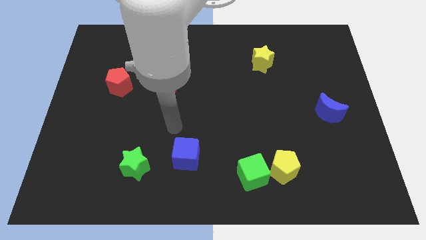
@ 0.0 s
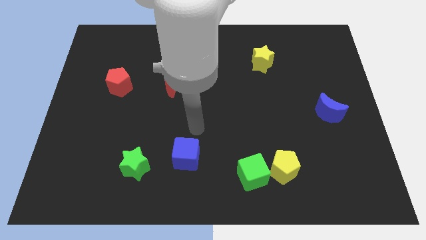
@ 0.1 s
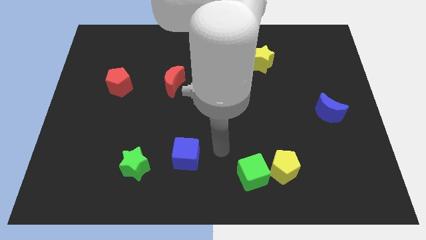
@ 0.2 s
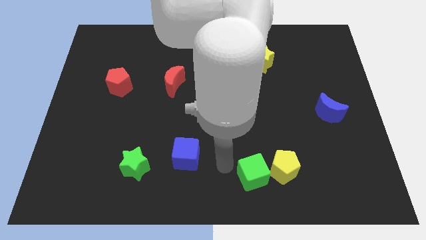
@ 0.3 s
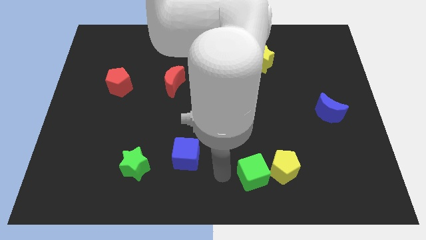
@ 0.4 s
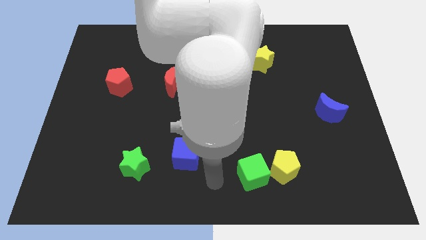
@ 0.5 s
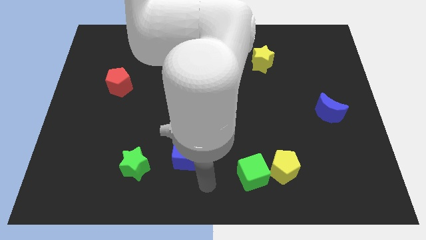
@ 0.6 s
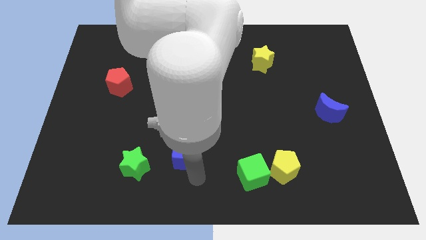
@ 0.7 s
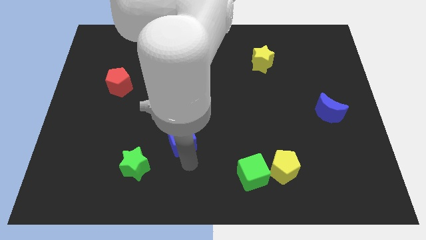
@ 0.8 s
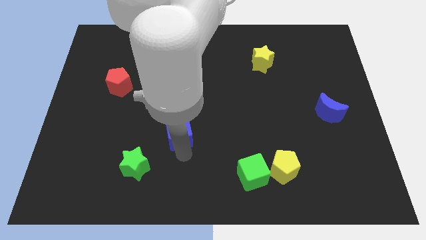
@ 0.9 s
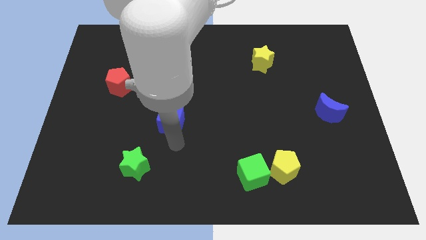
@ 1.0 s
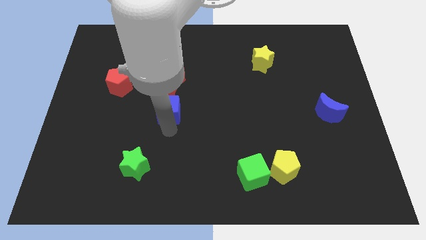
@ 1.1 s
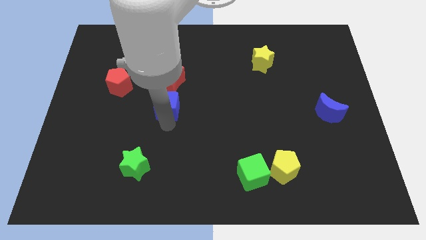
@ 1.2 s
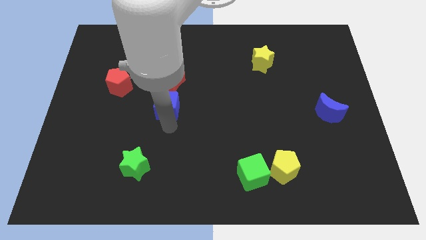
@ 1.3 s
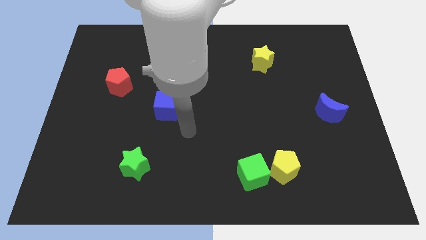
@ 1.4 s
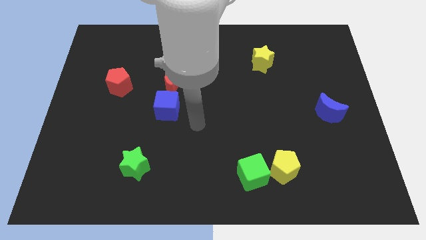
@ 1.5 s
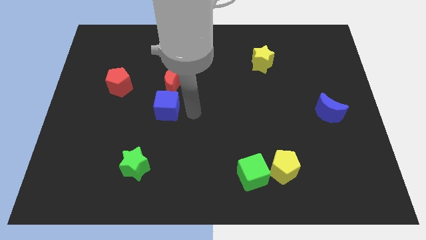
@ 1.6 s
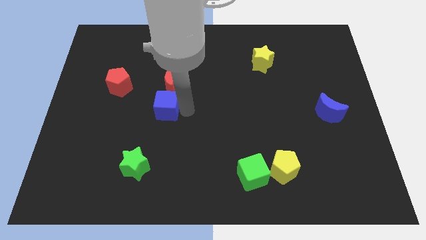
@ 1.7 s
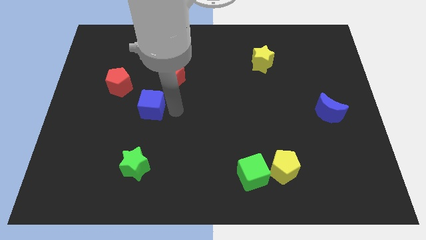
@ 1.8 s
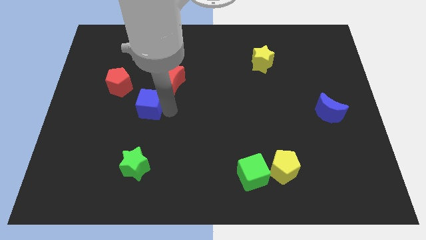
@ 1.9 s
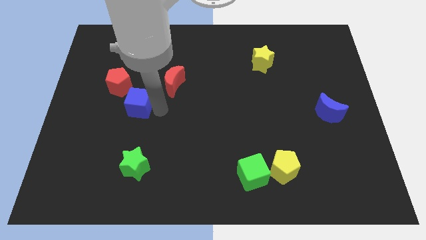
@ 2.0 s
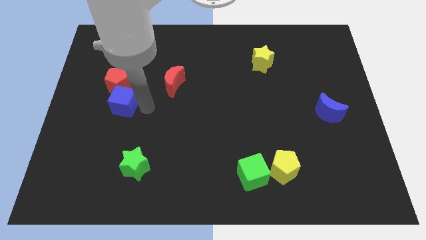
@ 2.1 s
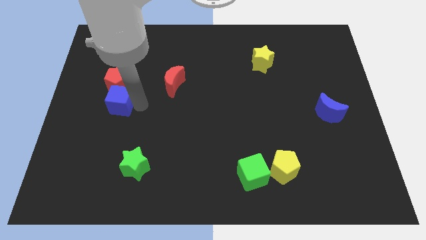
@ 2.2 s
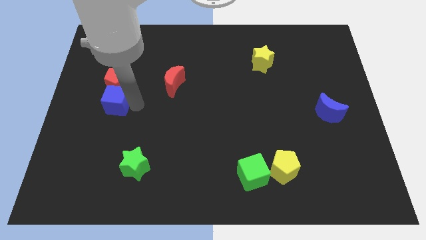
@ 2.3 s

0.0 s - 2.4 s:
move the blue cube next to the red pentagon

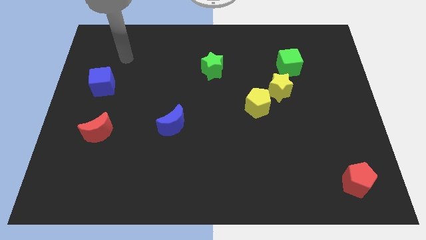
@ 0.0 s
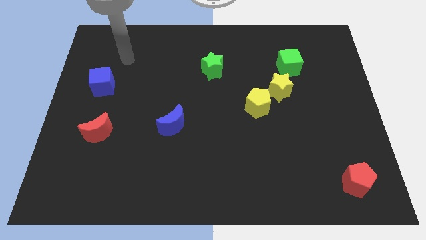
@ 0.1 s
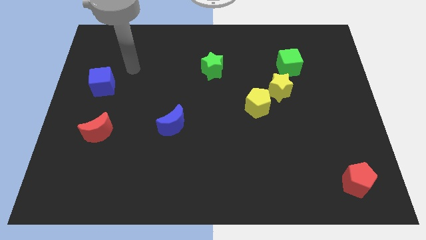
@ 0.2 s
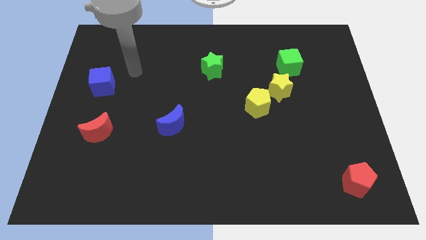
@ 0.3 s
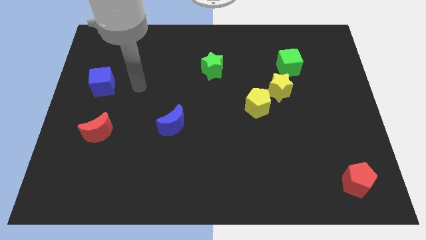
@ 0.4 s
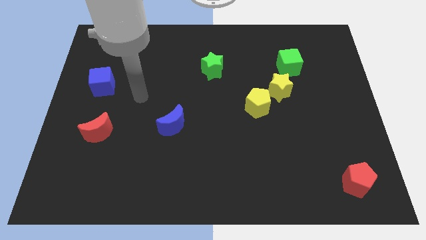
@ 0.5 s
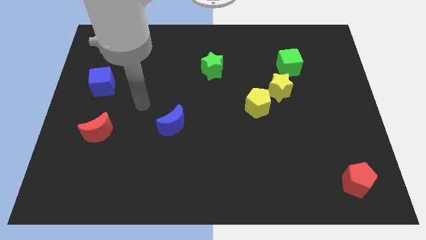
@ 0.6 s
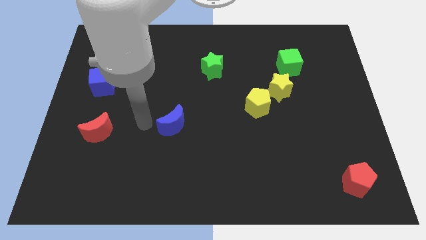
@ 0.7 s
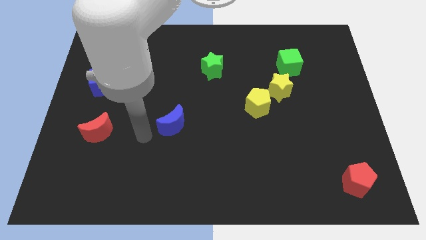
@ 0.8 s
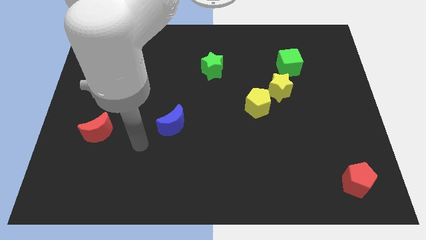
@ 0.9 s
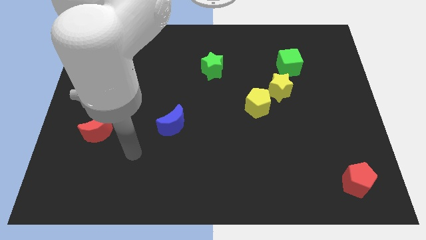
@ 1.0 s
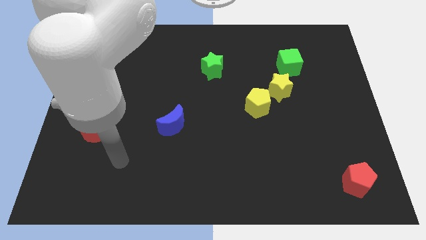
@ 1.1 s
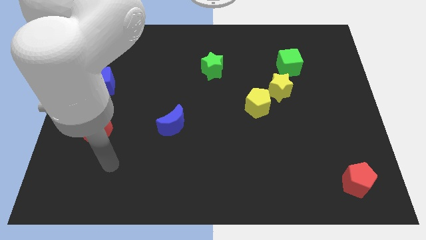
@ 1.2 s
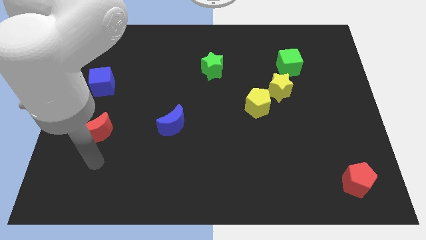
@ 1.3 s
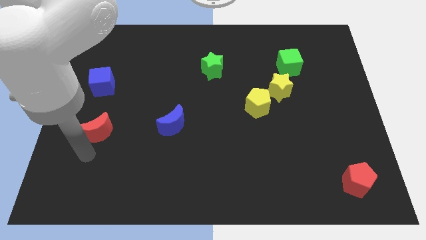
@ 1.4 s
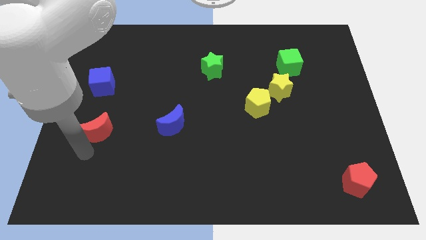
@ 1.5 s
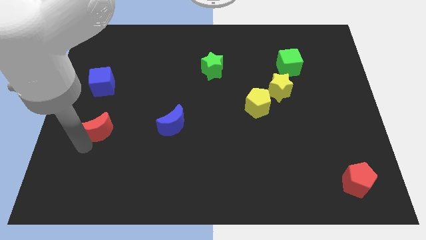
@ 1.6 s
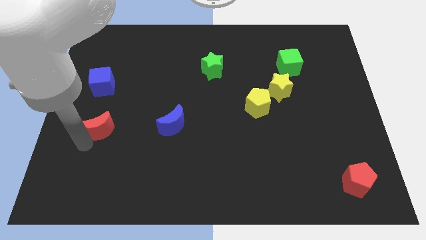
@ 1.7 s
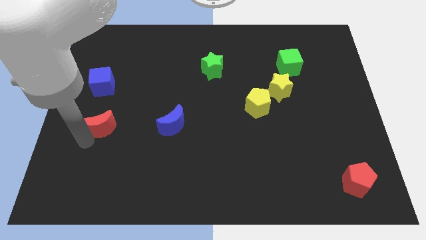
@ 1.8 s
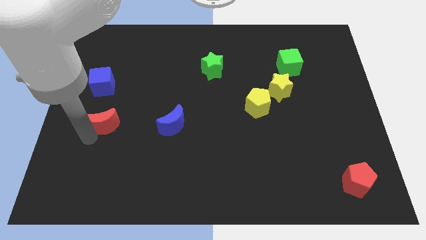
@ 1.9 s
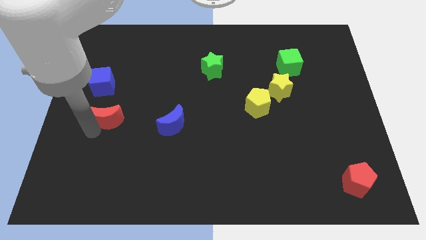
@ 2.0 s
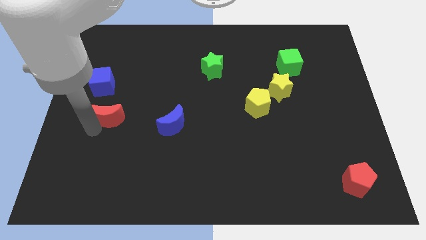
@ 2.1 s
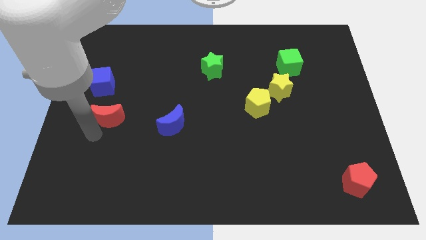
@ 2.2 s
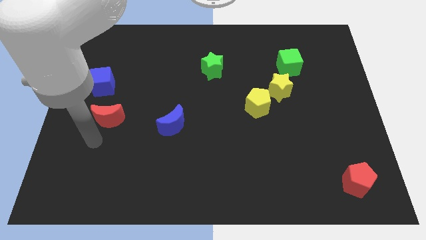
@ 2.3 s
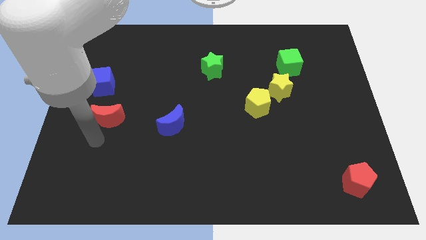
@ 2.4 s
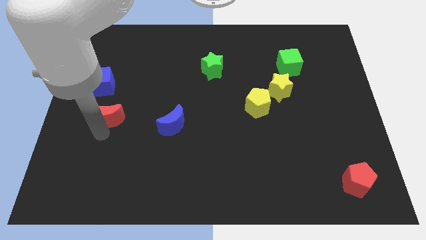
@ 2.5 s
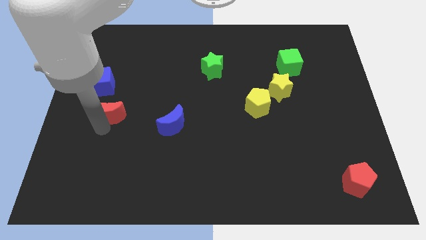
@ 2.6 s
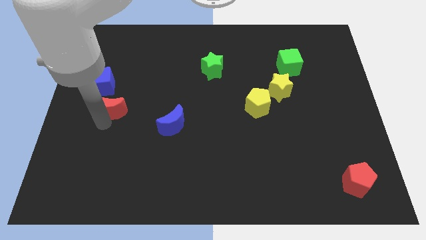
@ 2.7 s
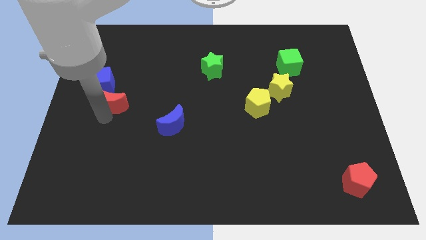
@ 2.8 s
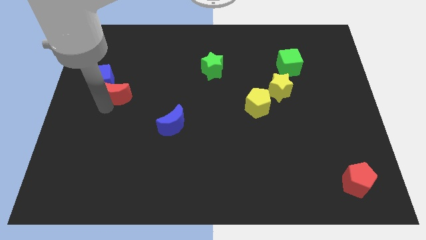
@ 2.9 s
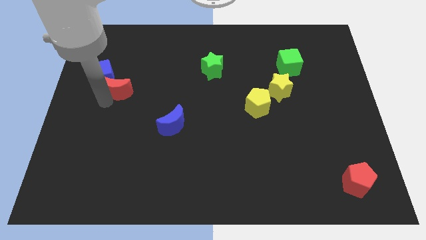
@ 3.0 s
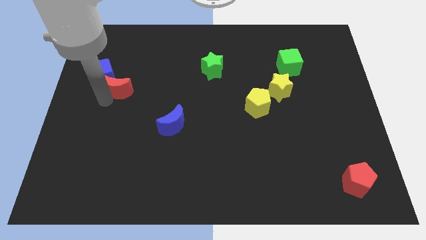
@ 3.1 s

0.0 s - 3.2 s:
put the red moon towards the blue cube

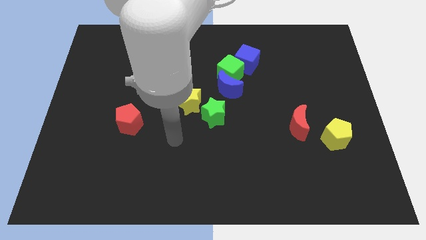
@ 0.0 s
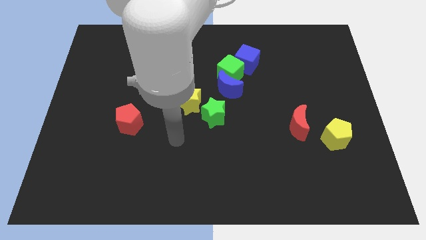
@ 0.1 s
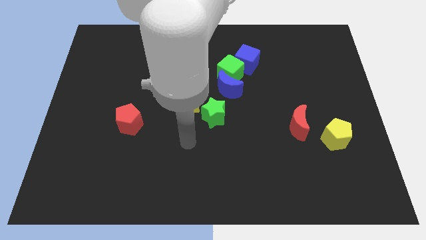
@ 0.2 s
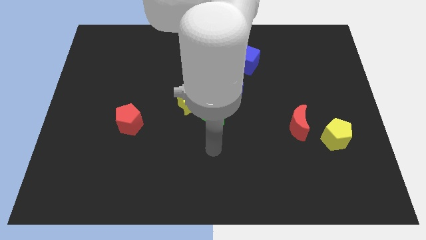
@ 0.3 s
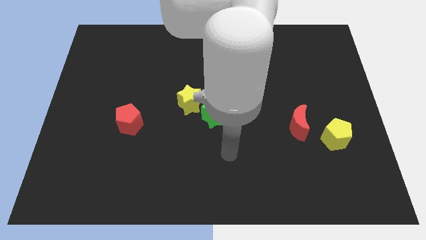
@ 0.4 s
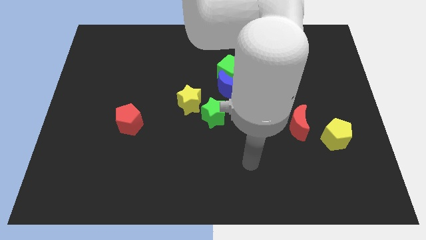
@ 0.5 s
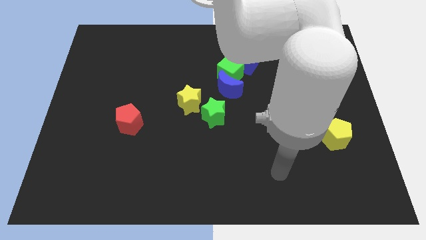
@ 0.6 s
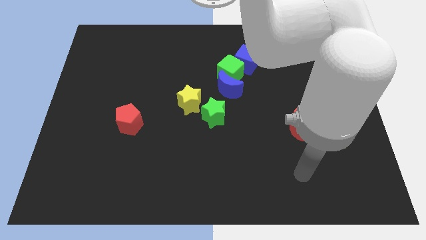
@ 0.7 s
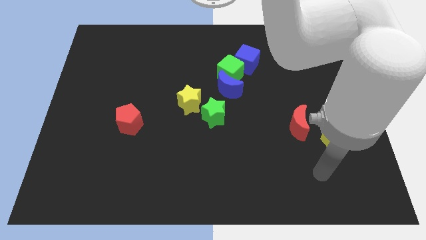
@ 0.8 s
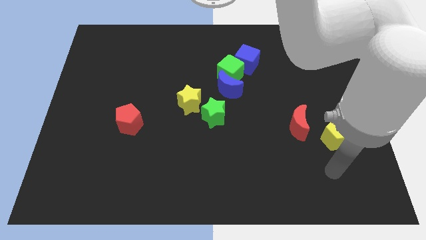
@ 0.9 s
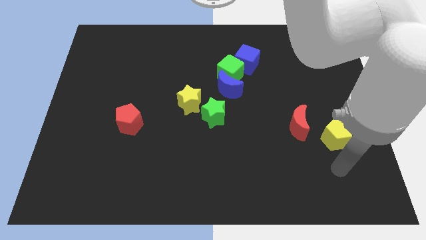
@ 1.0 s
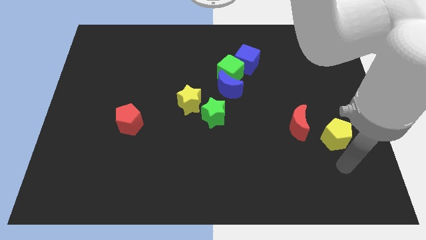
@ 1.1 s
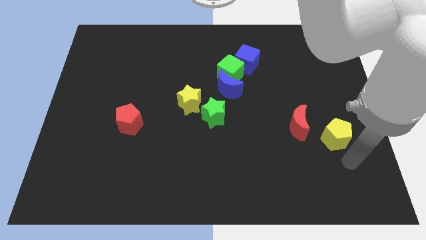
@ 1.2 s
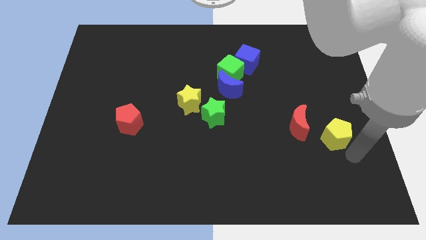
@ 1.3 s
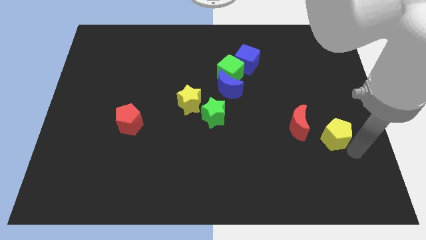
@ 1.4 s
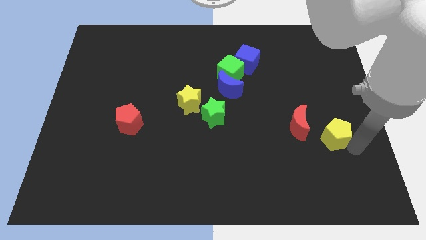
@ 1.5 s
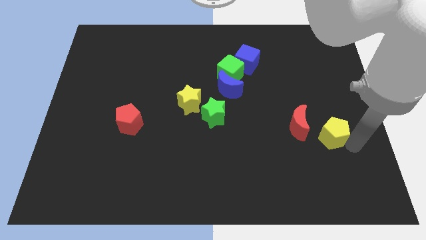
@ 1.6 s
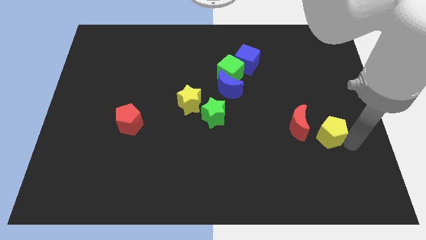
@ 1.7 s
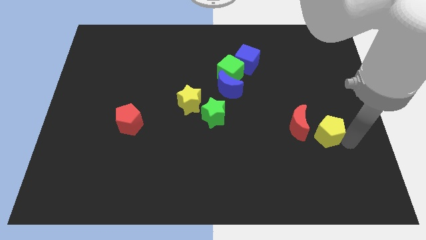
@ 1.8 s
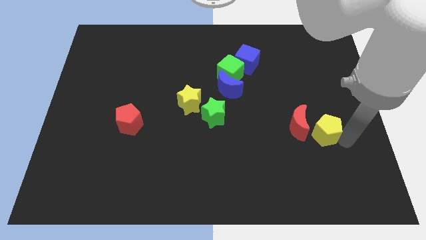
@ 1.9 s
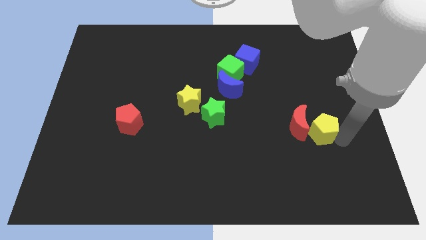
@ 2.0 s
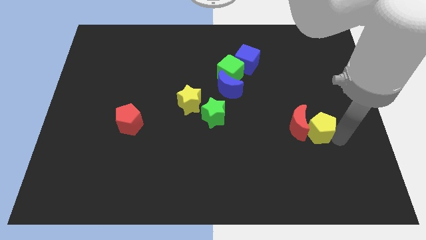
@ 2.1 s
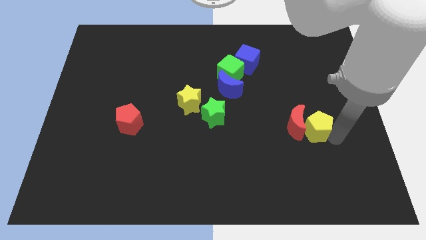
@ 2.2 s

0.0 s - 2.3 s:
move the yellow pentagon close to the red moon

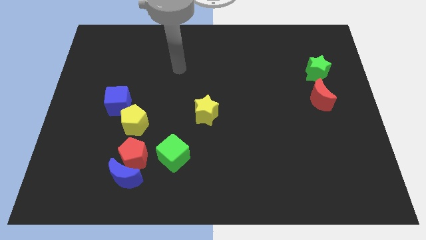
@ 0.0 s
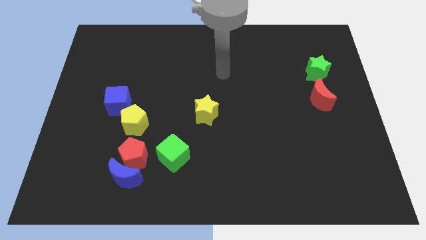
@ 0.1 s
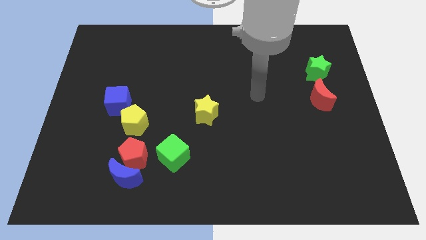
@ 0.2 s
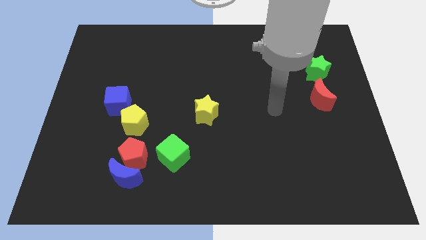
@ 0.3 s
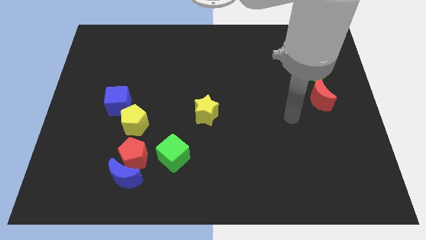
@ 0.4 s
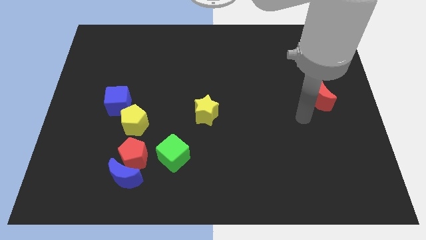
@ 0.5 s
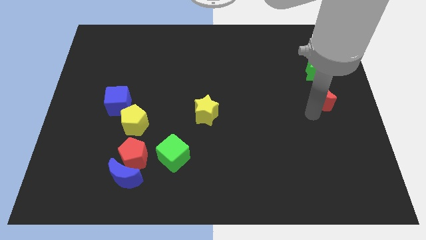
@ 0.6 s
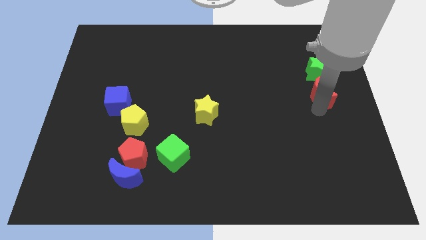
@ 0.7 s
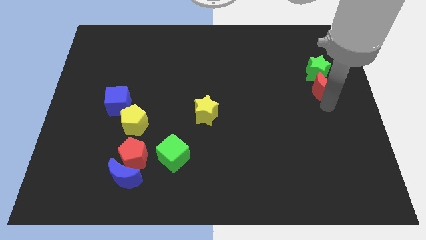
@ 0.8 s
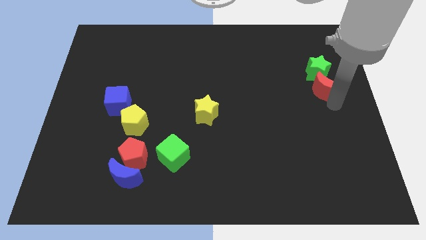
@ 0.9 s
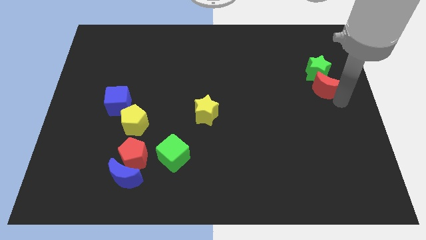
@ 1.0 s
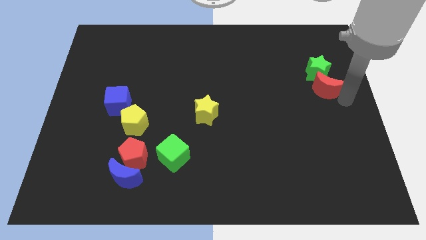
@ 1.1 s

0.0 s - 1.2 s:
push the red moon close to the green star
